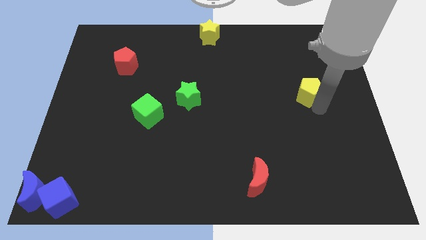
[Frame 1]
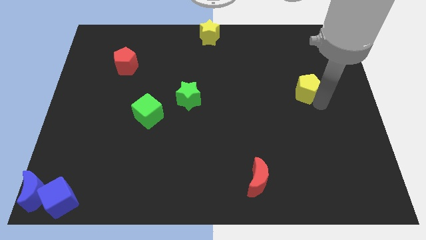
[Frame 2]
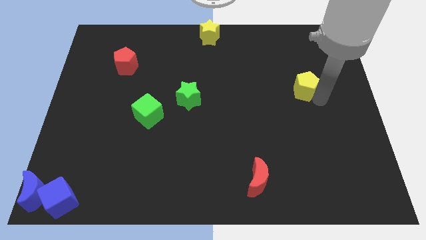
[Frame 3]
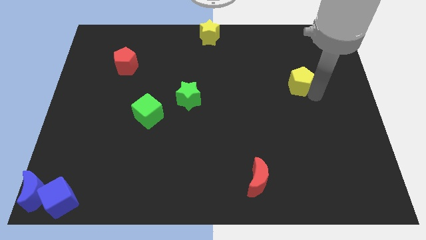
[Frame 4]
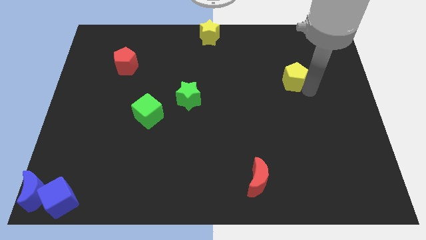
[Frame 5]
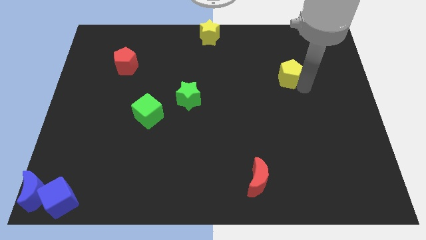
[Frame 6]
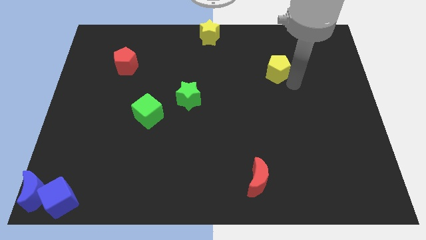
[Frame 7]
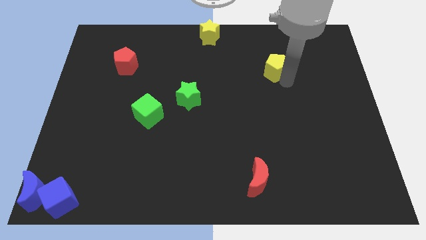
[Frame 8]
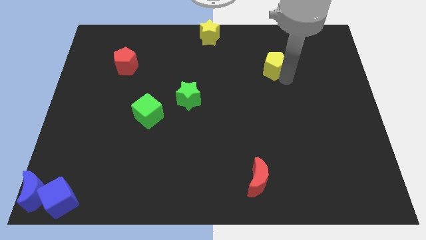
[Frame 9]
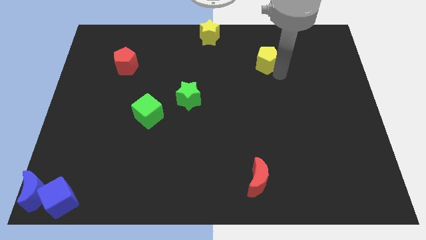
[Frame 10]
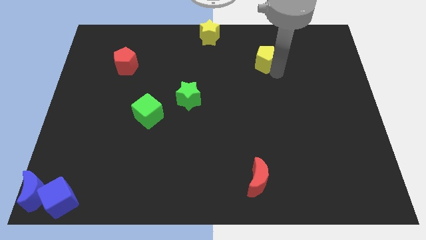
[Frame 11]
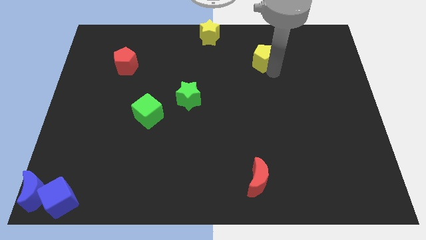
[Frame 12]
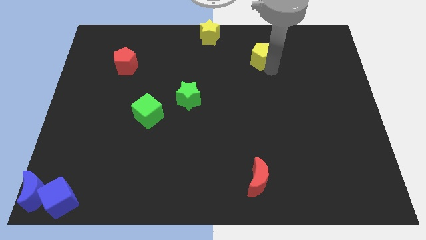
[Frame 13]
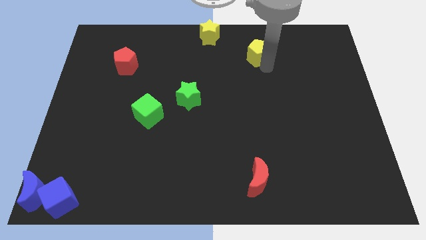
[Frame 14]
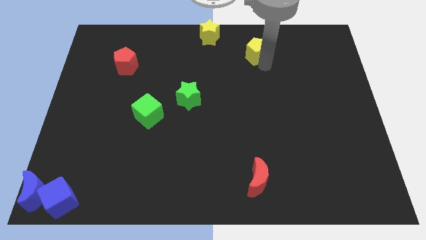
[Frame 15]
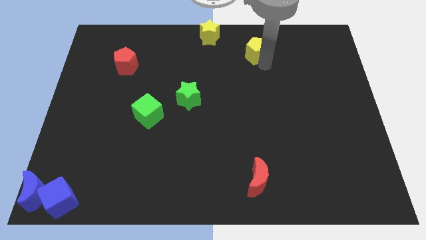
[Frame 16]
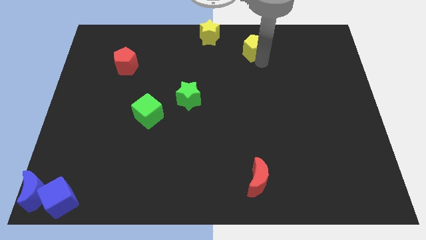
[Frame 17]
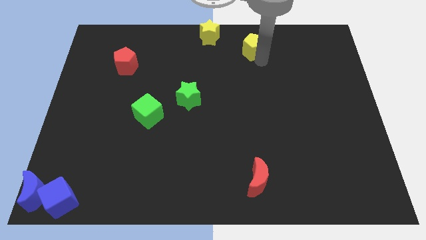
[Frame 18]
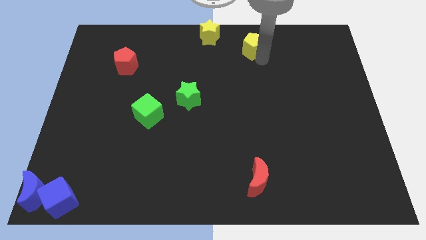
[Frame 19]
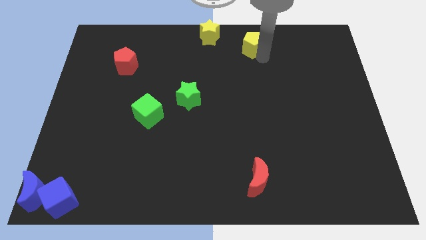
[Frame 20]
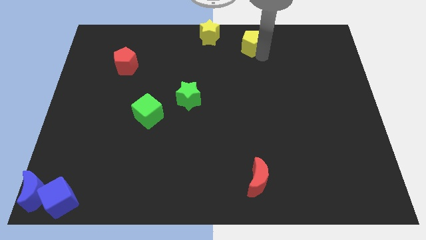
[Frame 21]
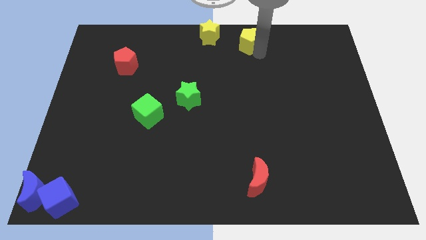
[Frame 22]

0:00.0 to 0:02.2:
push the yellow pentagon towards the top center of the board

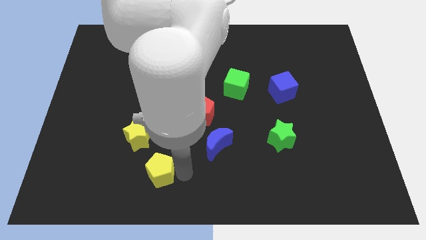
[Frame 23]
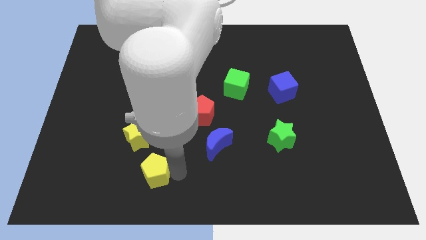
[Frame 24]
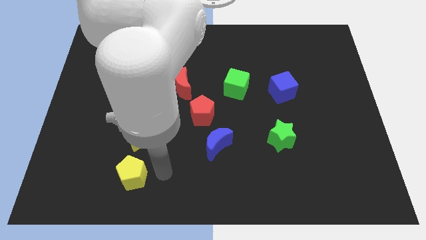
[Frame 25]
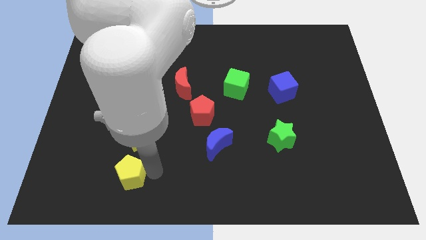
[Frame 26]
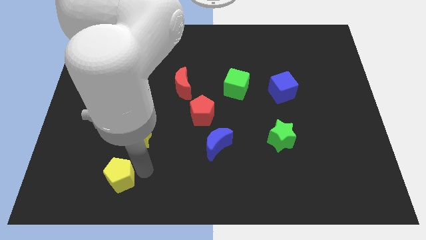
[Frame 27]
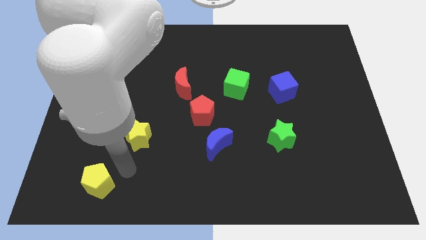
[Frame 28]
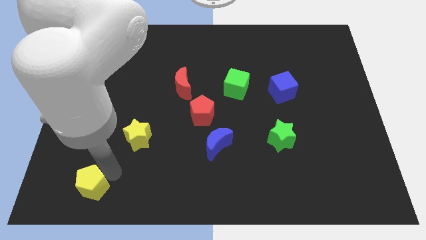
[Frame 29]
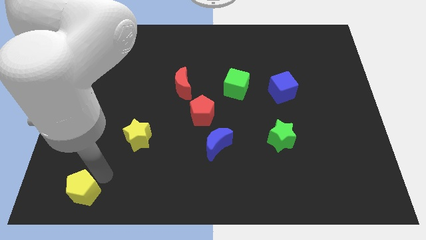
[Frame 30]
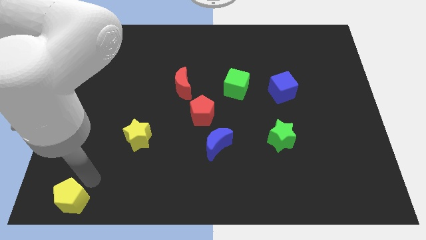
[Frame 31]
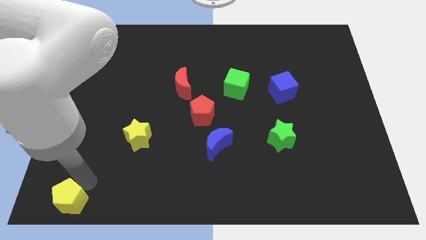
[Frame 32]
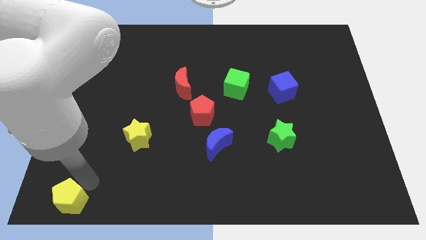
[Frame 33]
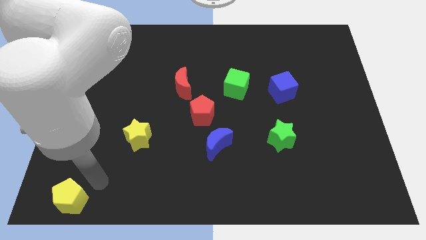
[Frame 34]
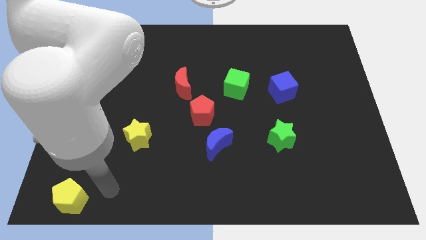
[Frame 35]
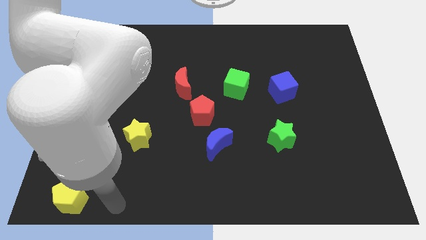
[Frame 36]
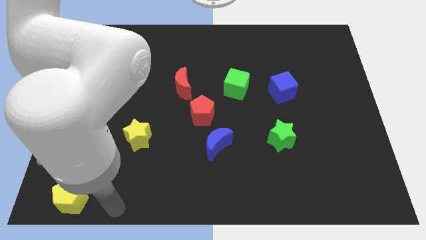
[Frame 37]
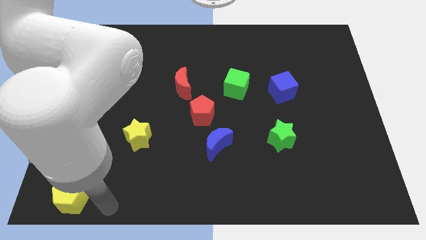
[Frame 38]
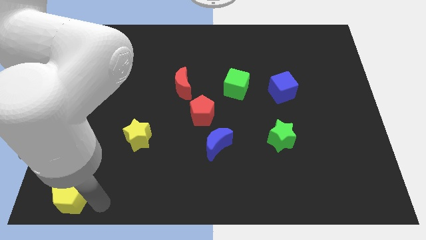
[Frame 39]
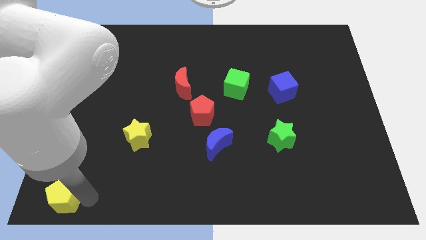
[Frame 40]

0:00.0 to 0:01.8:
move the yellow pentagon towards the bottom left corner of the board

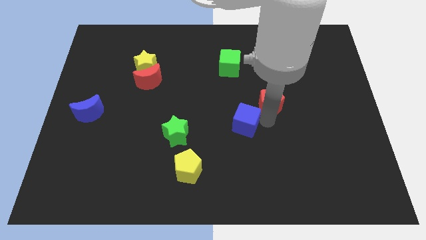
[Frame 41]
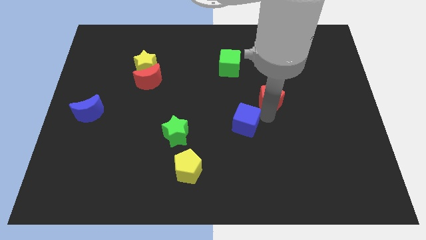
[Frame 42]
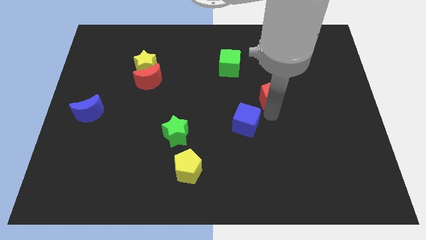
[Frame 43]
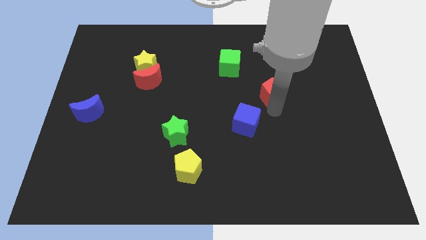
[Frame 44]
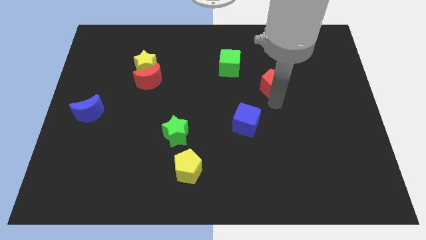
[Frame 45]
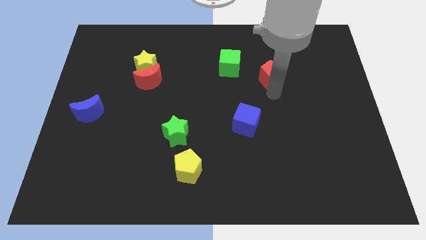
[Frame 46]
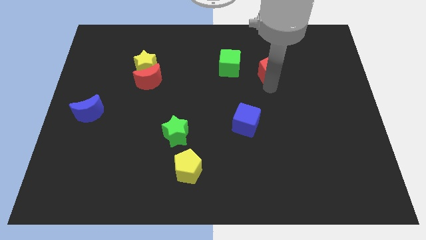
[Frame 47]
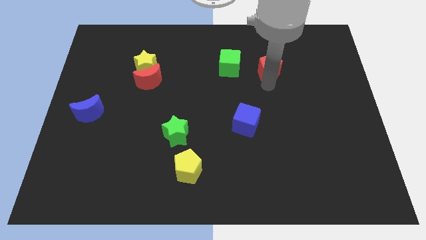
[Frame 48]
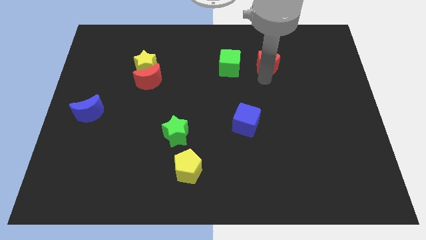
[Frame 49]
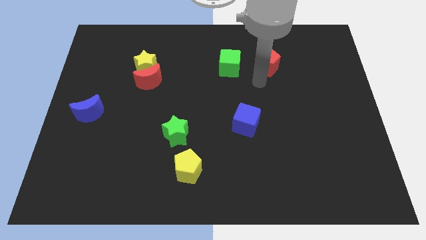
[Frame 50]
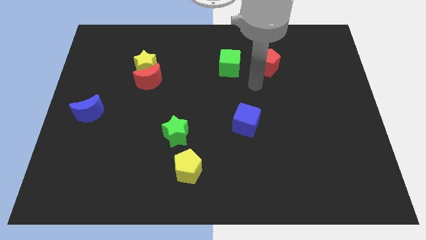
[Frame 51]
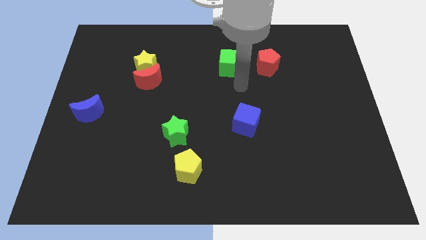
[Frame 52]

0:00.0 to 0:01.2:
push the red pentagon to the right side of the green cube

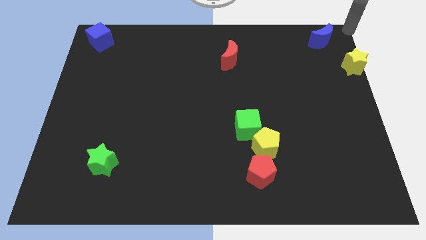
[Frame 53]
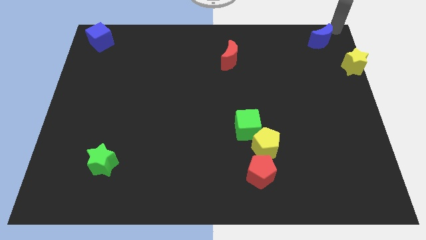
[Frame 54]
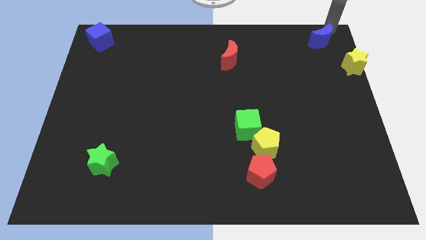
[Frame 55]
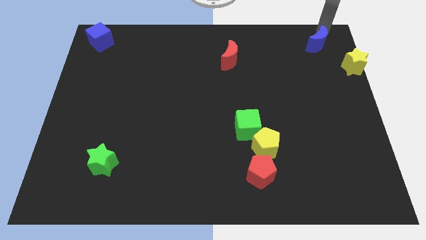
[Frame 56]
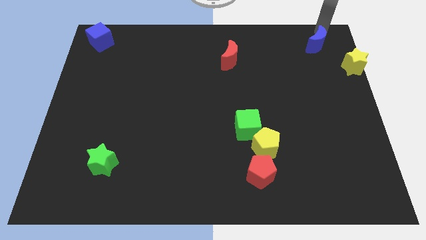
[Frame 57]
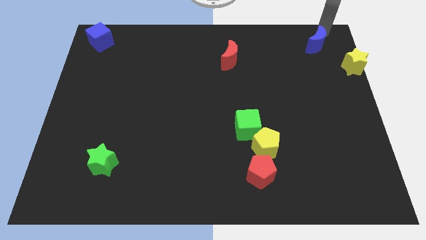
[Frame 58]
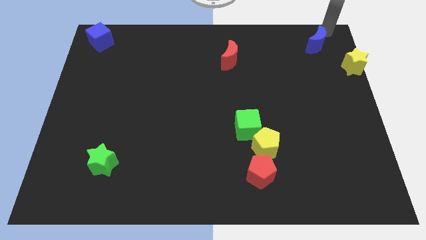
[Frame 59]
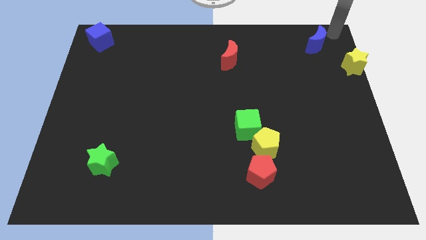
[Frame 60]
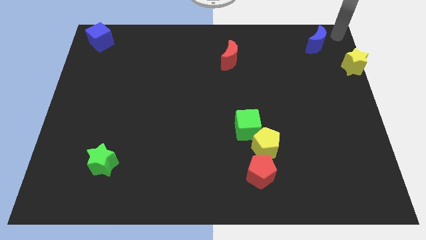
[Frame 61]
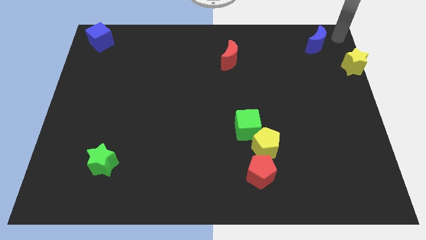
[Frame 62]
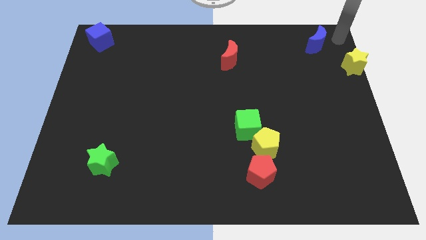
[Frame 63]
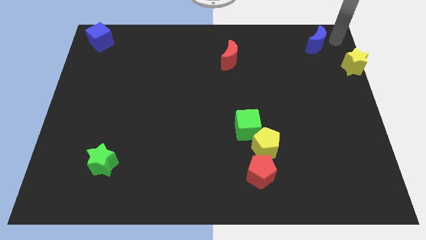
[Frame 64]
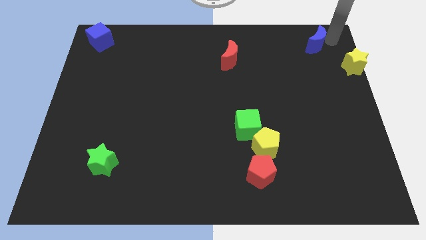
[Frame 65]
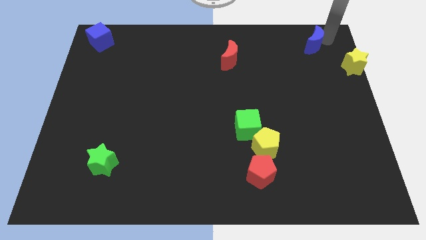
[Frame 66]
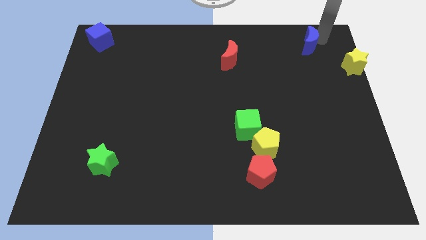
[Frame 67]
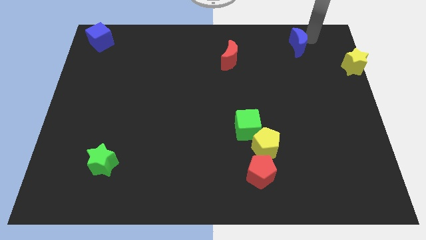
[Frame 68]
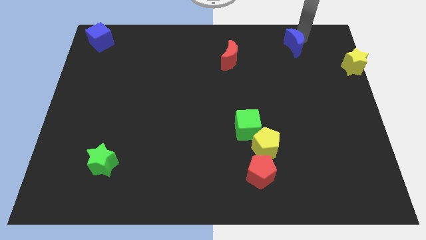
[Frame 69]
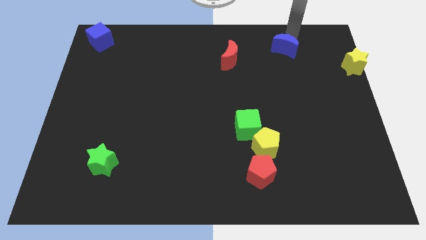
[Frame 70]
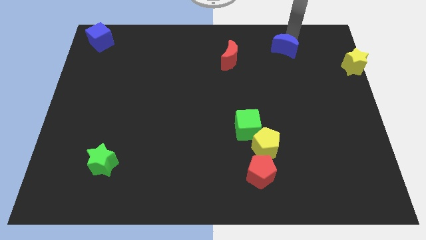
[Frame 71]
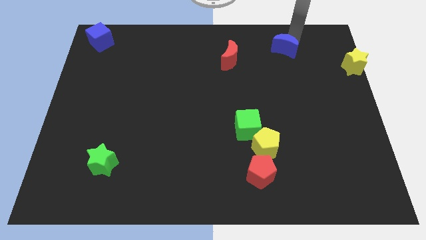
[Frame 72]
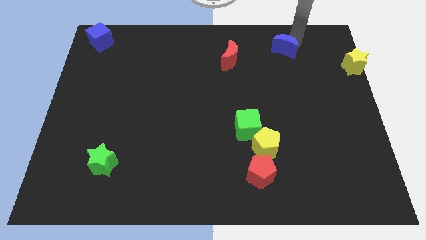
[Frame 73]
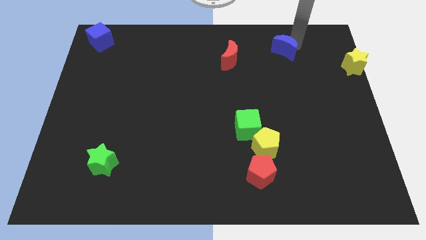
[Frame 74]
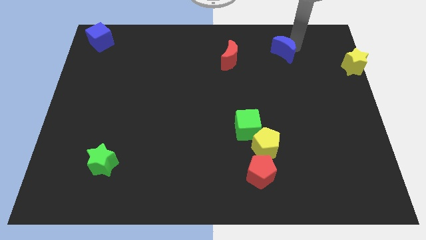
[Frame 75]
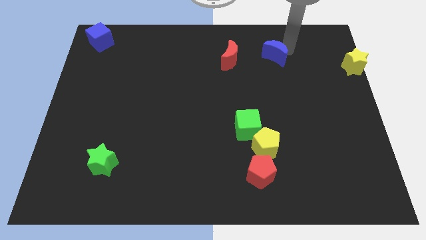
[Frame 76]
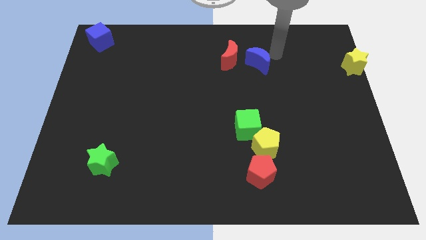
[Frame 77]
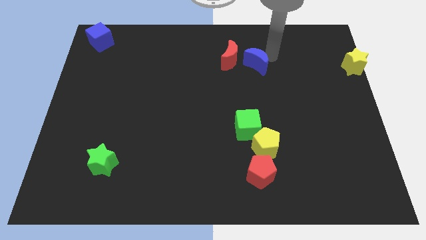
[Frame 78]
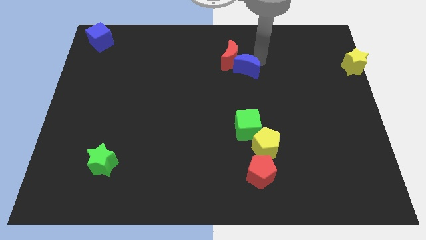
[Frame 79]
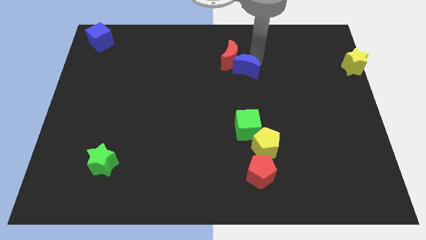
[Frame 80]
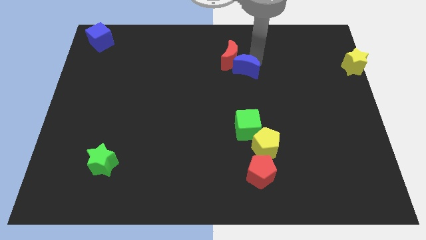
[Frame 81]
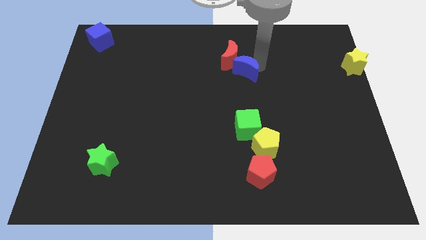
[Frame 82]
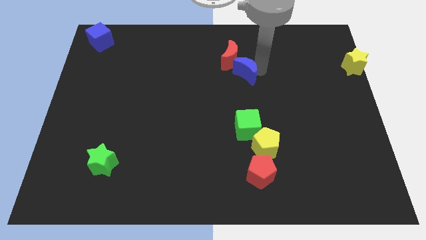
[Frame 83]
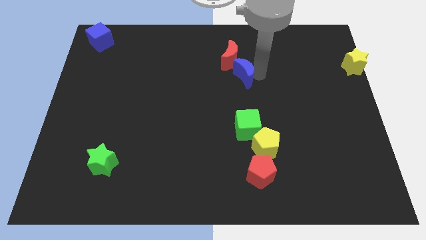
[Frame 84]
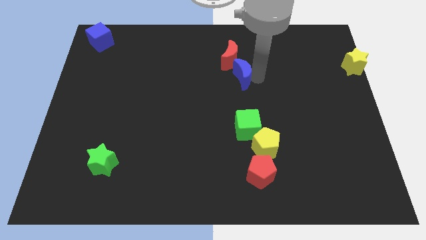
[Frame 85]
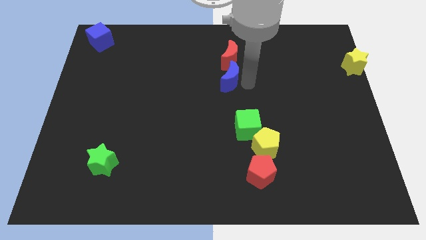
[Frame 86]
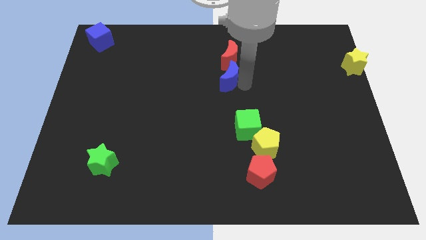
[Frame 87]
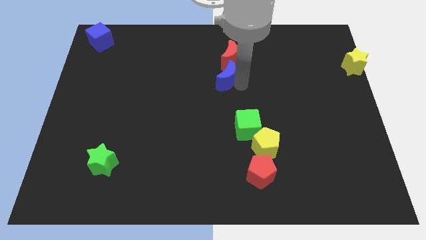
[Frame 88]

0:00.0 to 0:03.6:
push blue moon to the bottom of red moon

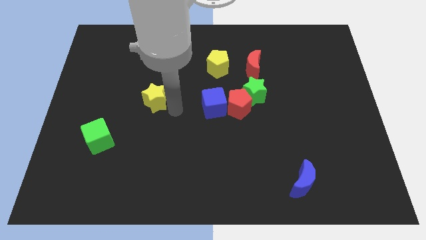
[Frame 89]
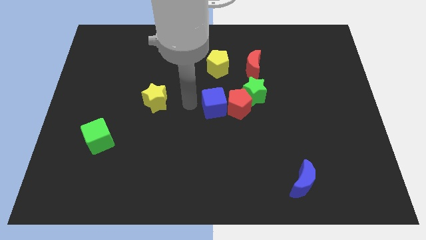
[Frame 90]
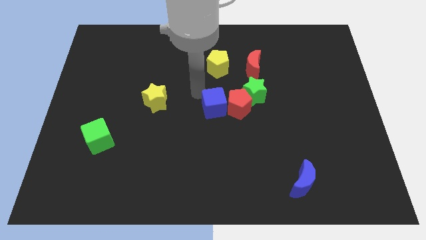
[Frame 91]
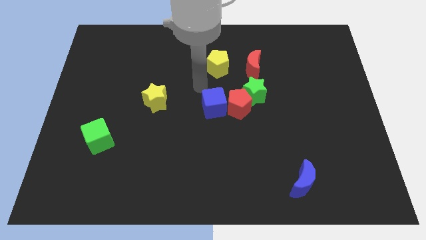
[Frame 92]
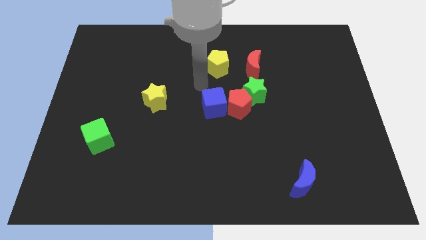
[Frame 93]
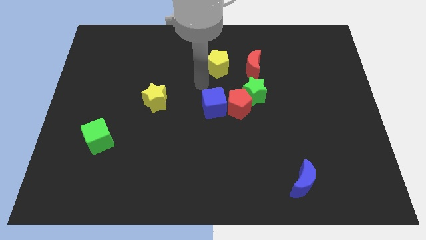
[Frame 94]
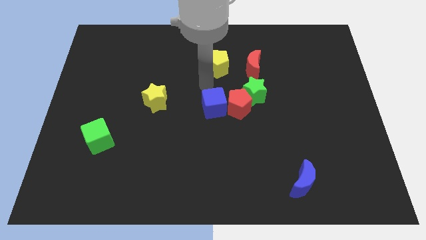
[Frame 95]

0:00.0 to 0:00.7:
move the arm towards the top of the blue cube
